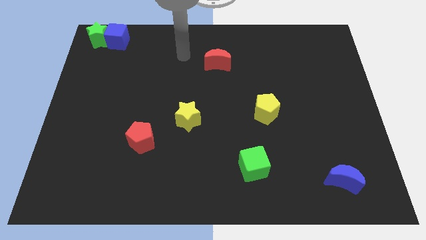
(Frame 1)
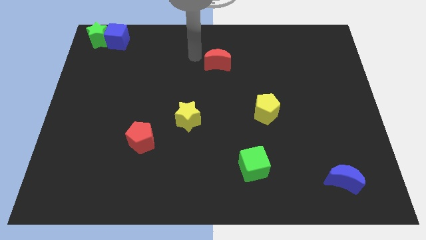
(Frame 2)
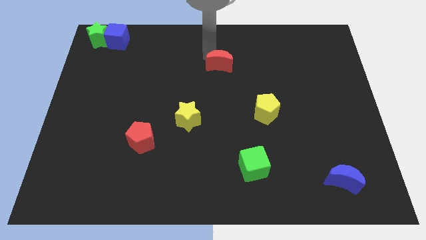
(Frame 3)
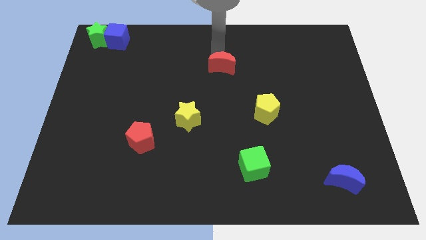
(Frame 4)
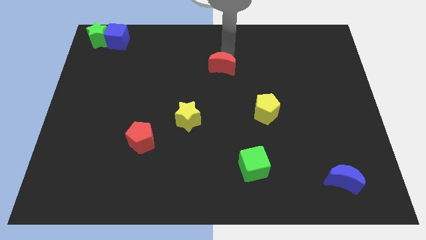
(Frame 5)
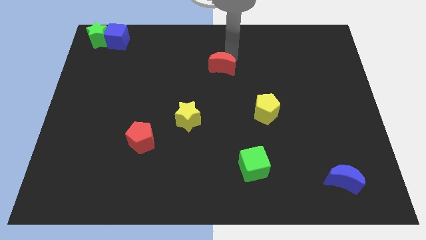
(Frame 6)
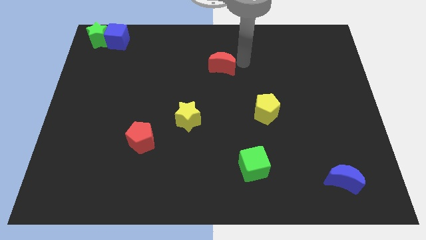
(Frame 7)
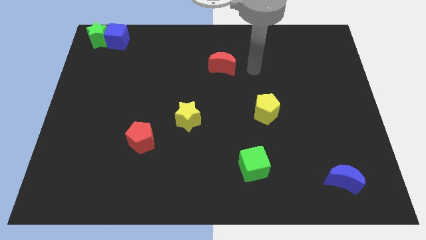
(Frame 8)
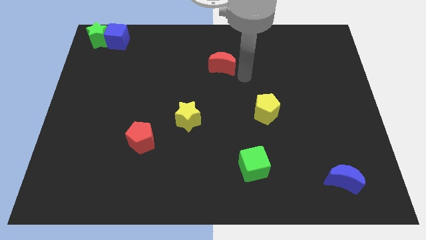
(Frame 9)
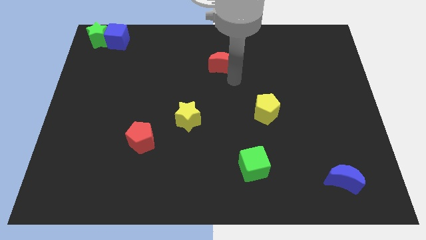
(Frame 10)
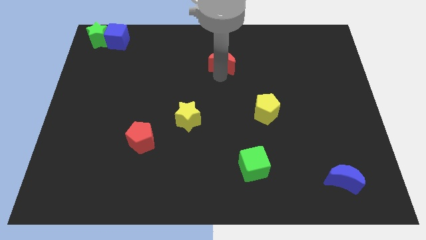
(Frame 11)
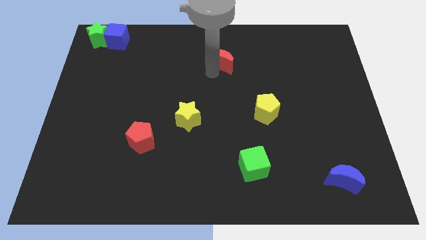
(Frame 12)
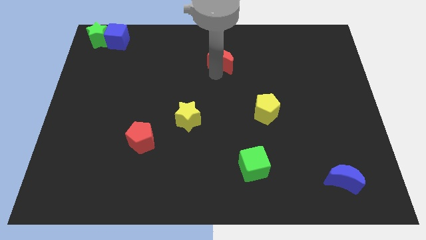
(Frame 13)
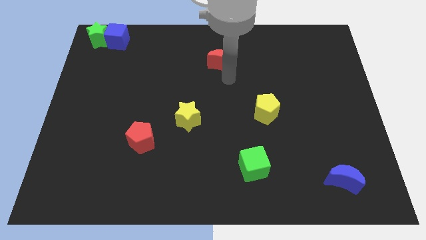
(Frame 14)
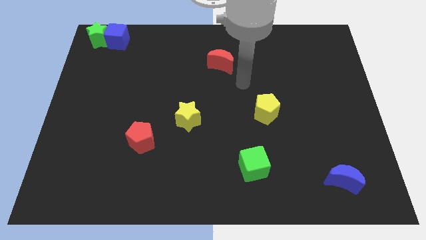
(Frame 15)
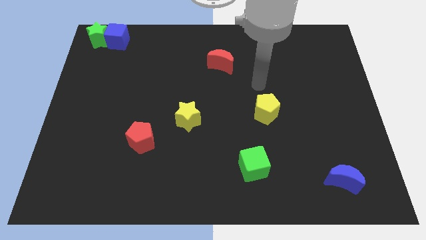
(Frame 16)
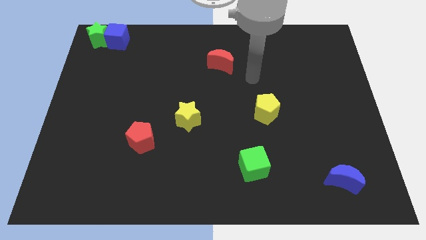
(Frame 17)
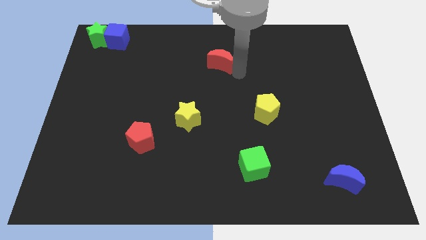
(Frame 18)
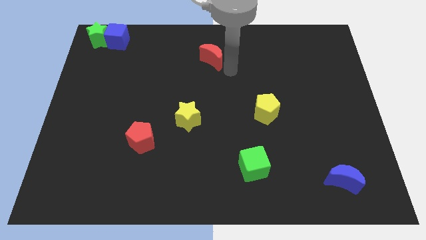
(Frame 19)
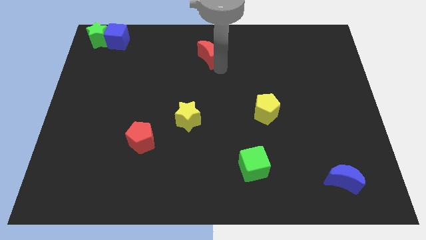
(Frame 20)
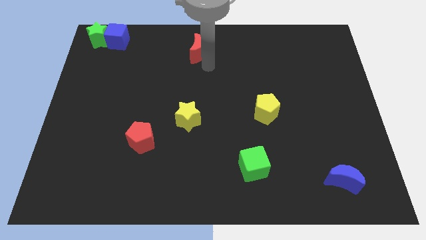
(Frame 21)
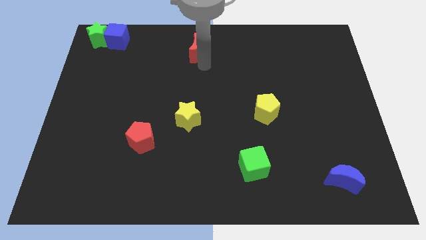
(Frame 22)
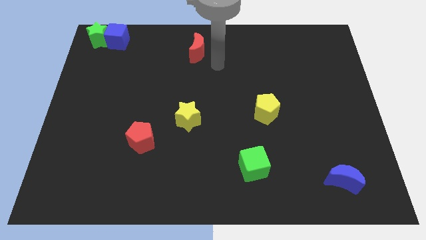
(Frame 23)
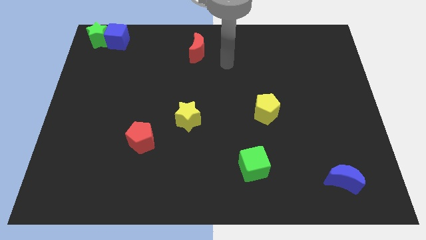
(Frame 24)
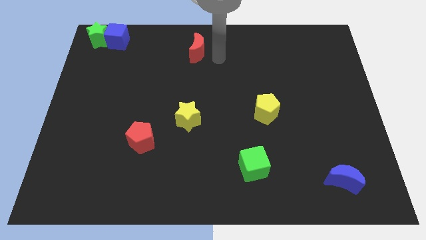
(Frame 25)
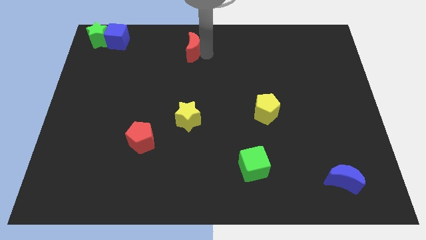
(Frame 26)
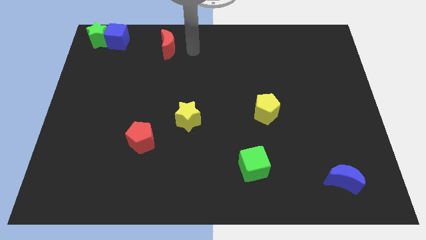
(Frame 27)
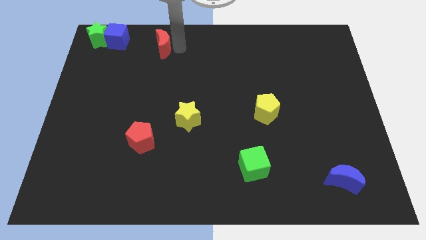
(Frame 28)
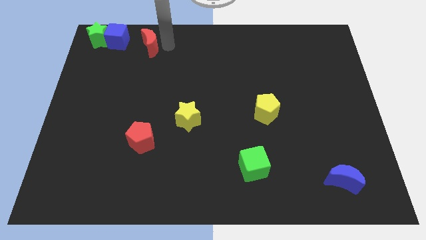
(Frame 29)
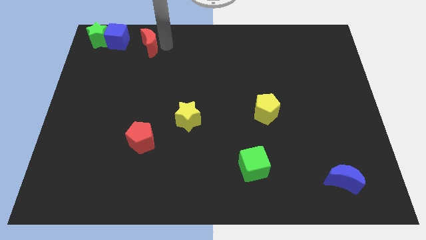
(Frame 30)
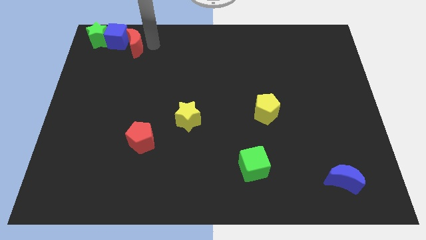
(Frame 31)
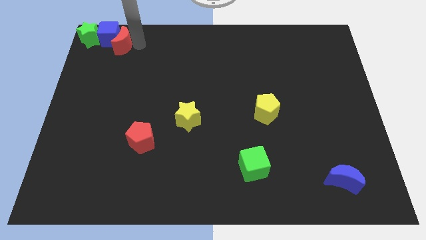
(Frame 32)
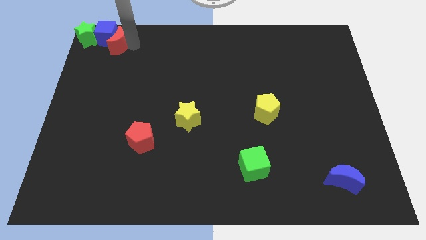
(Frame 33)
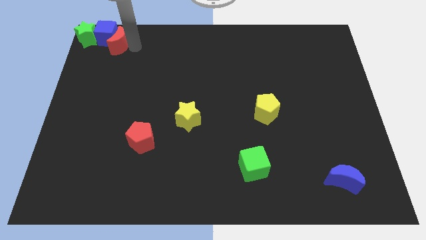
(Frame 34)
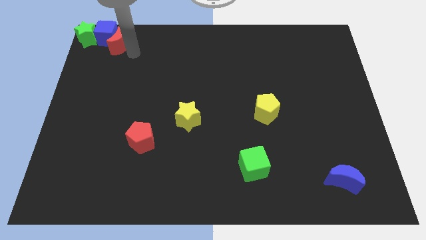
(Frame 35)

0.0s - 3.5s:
move the red moon into the blue cube

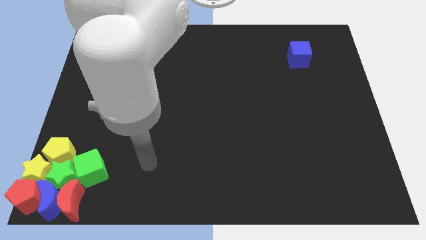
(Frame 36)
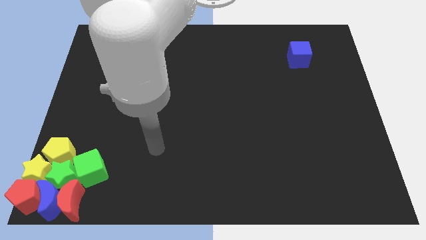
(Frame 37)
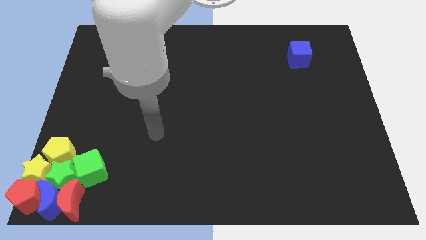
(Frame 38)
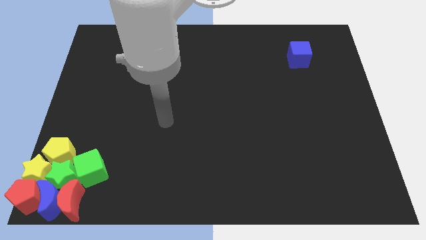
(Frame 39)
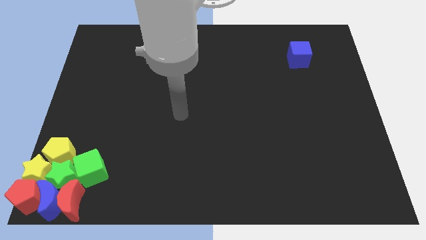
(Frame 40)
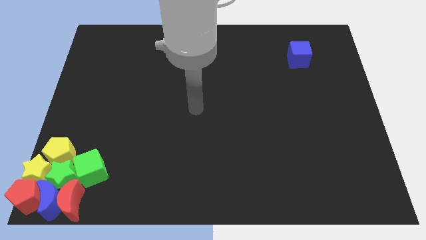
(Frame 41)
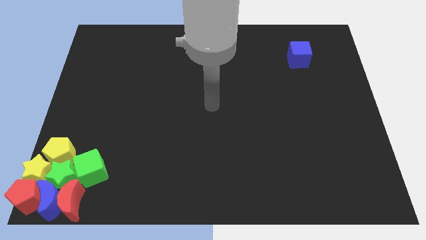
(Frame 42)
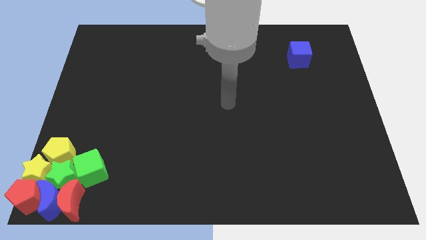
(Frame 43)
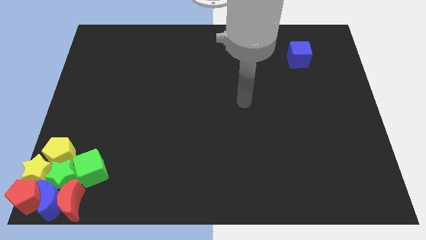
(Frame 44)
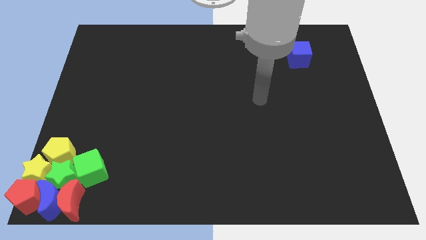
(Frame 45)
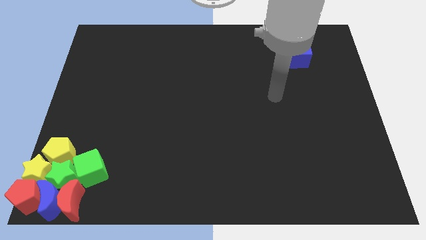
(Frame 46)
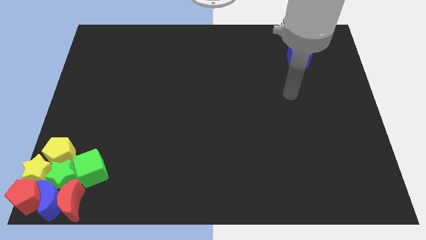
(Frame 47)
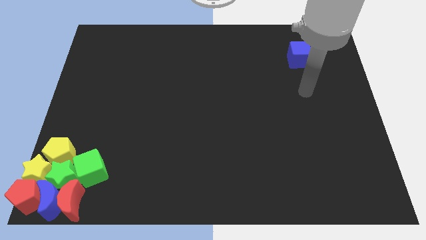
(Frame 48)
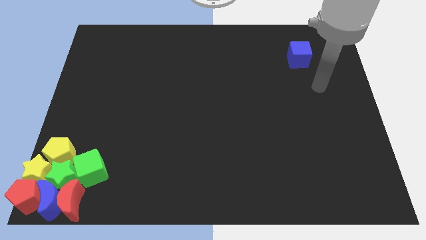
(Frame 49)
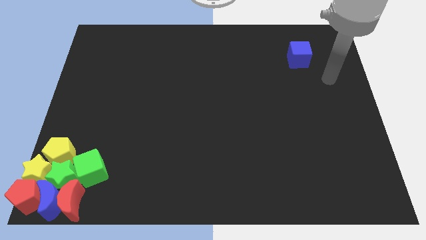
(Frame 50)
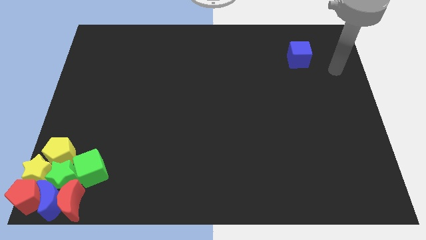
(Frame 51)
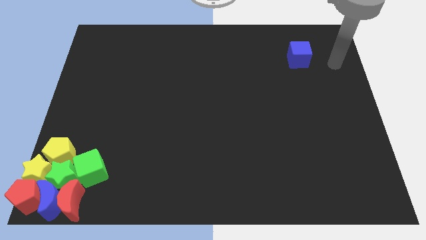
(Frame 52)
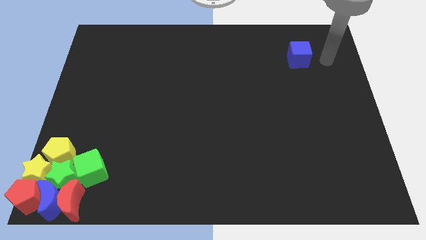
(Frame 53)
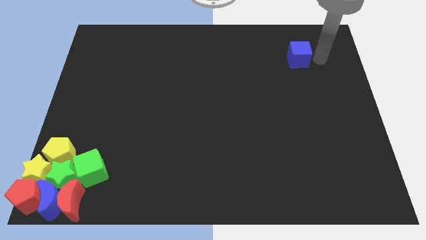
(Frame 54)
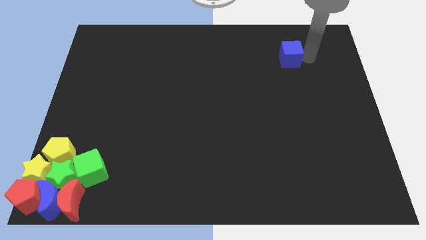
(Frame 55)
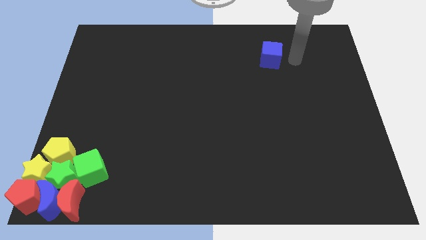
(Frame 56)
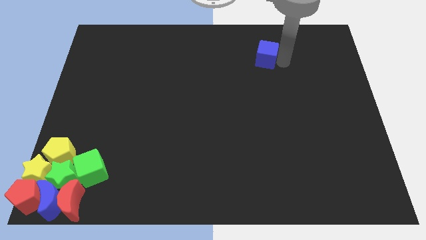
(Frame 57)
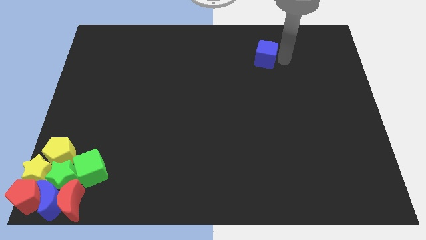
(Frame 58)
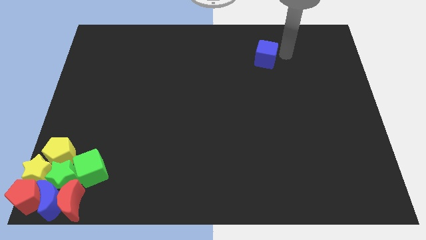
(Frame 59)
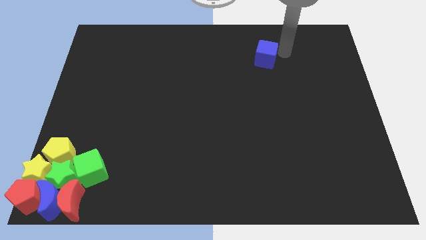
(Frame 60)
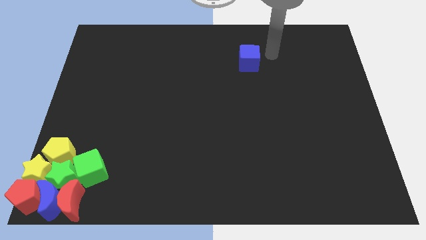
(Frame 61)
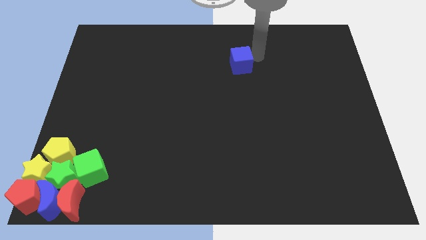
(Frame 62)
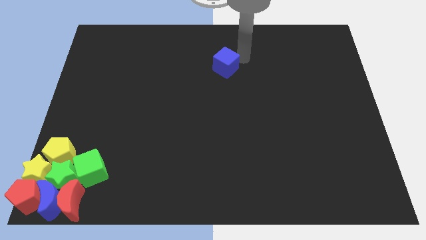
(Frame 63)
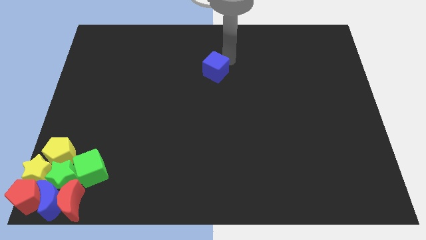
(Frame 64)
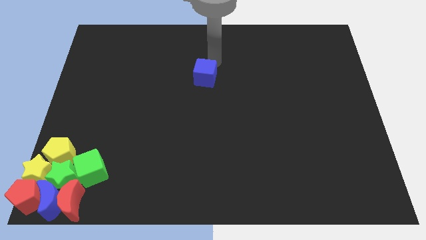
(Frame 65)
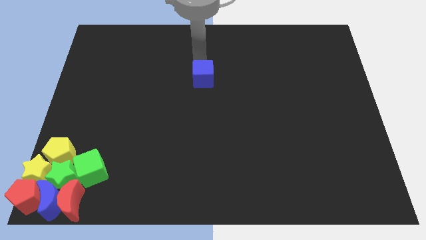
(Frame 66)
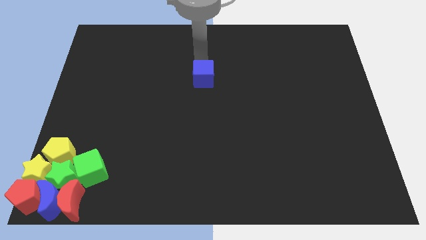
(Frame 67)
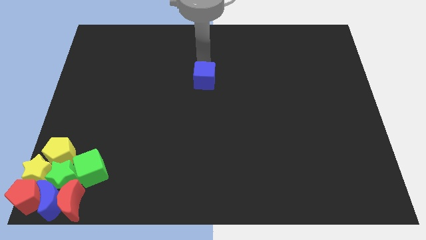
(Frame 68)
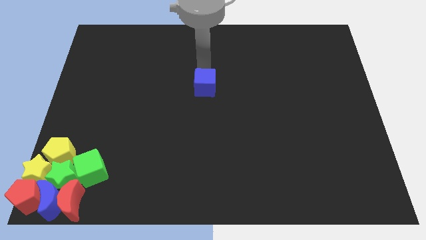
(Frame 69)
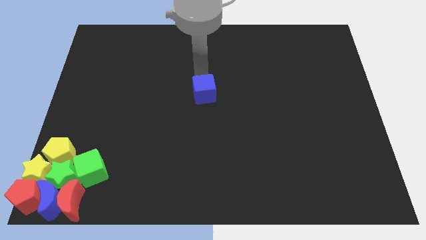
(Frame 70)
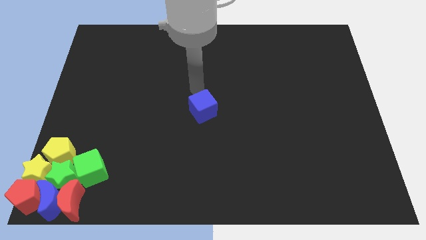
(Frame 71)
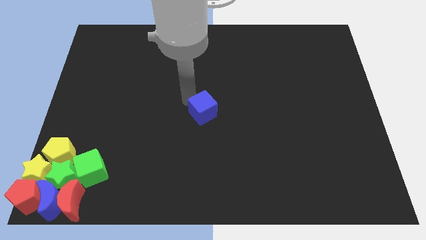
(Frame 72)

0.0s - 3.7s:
put the blue cube at the center of the board

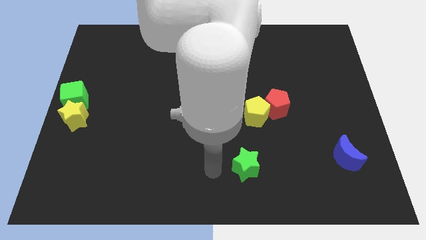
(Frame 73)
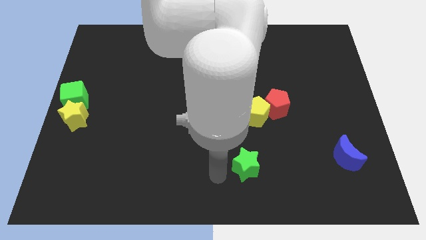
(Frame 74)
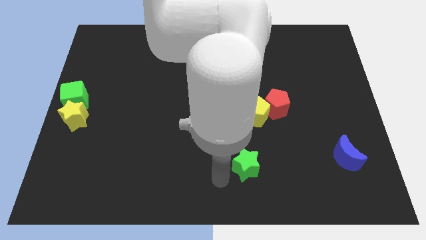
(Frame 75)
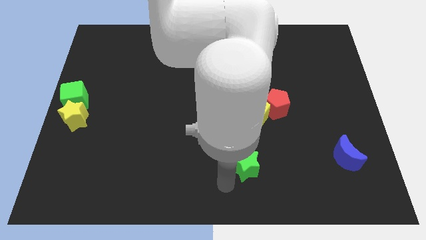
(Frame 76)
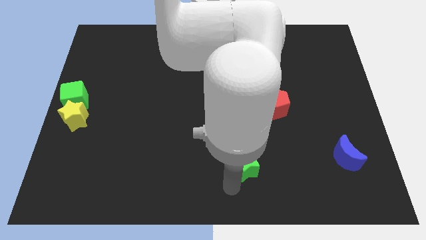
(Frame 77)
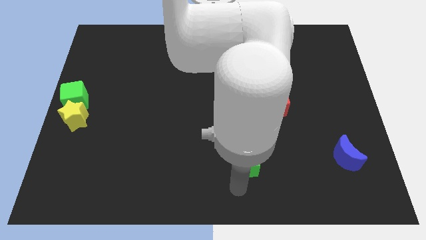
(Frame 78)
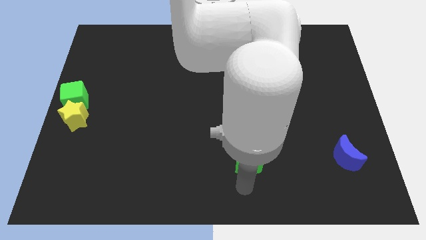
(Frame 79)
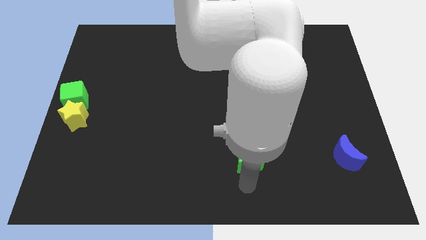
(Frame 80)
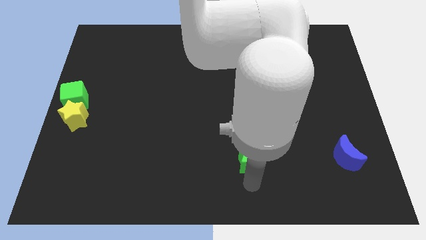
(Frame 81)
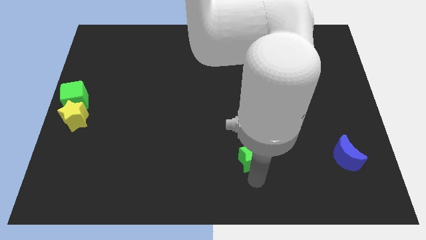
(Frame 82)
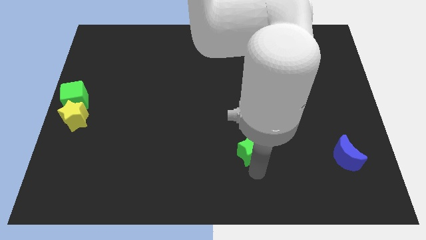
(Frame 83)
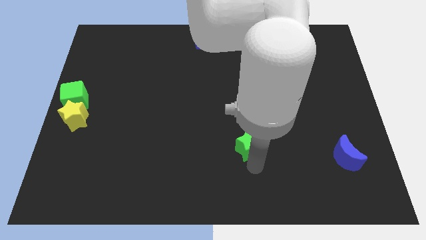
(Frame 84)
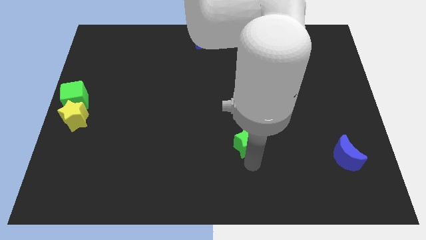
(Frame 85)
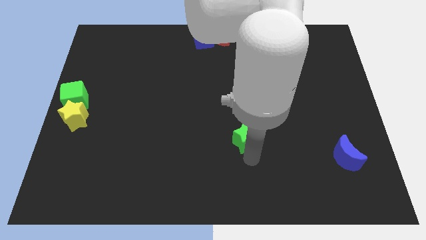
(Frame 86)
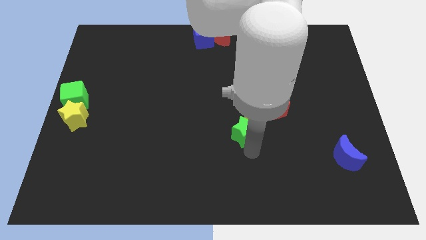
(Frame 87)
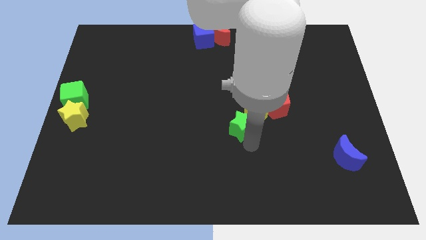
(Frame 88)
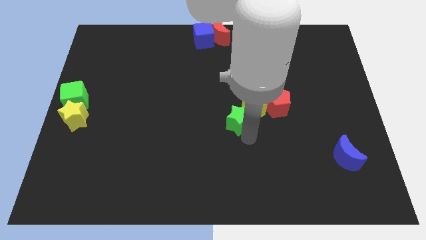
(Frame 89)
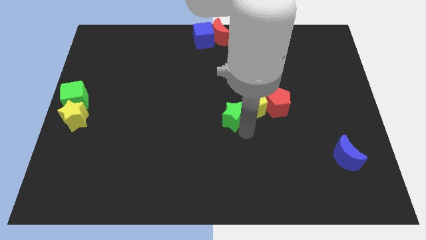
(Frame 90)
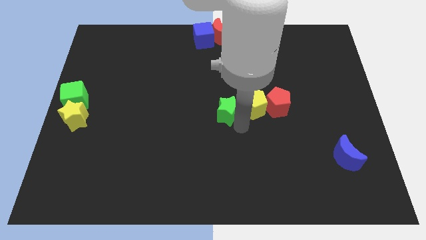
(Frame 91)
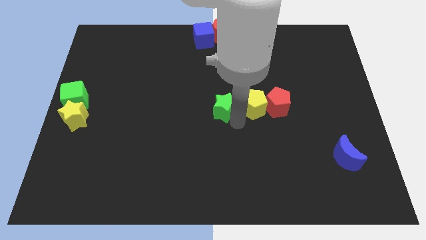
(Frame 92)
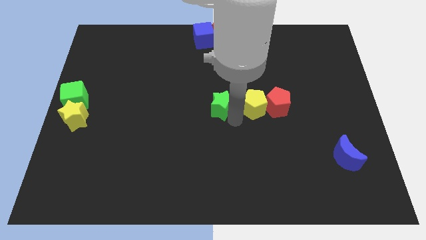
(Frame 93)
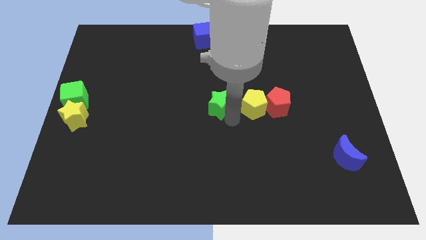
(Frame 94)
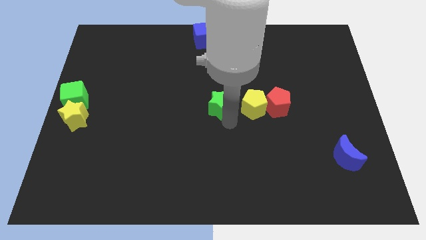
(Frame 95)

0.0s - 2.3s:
place the green star to the left of yellow pentagon
